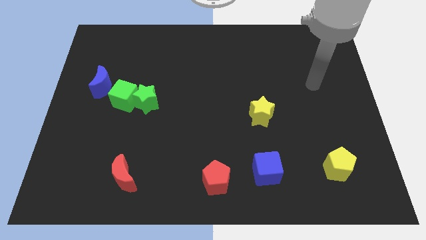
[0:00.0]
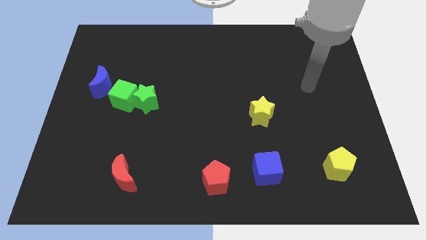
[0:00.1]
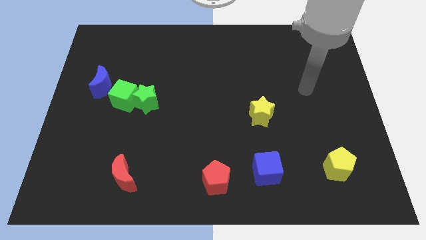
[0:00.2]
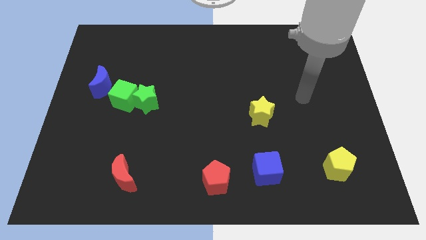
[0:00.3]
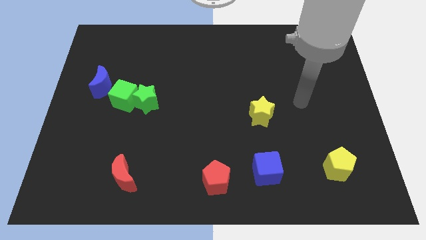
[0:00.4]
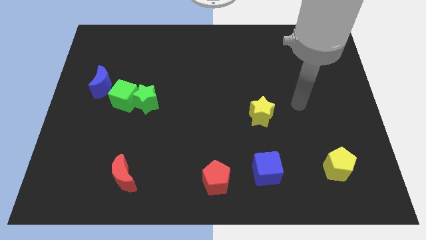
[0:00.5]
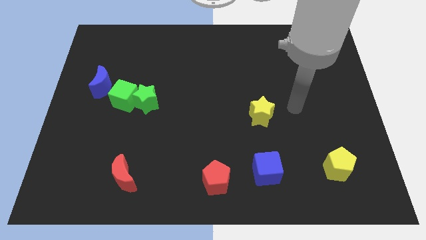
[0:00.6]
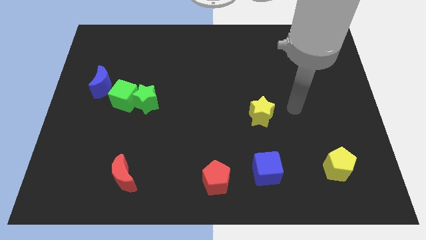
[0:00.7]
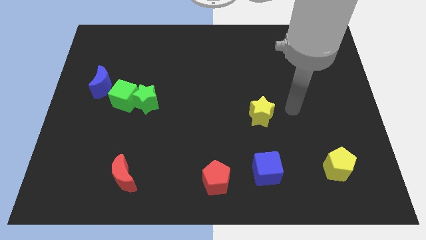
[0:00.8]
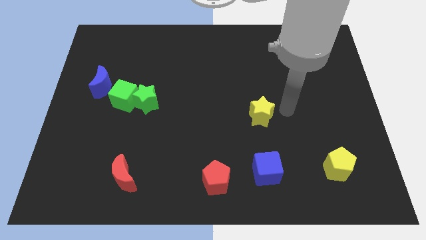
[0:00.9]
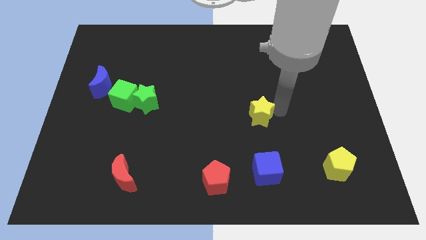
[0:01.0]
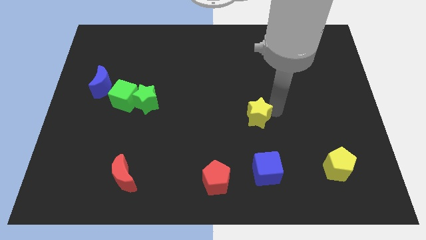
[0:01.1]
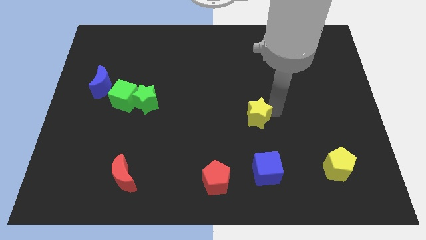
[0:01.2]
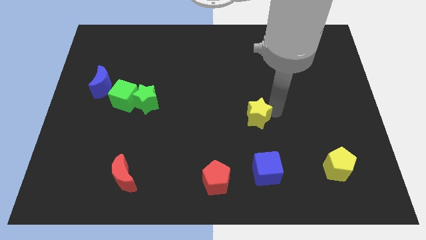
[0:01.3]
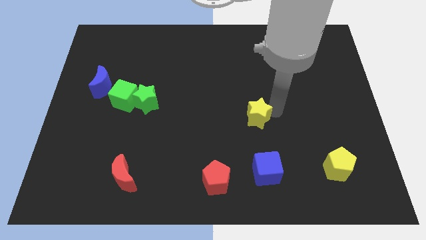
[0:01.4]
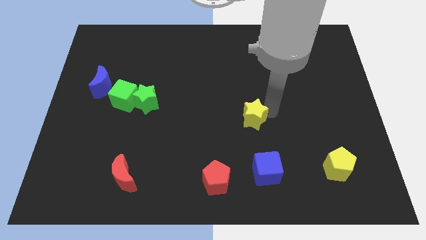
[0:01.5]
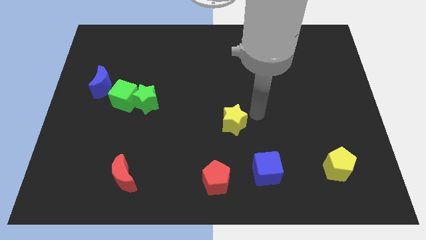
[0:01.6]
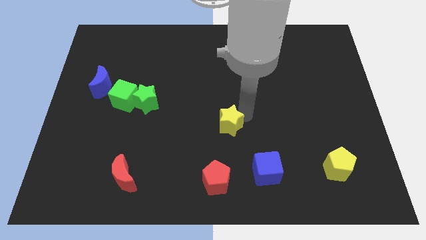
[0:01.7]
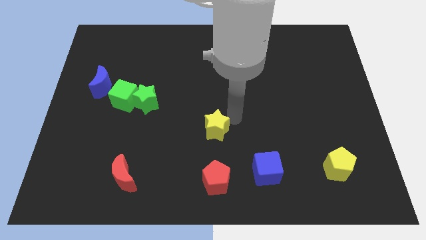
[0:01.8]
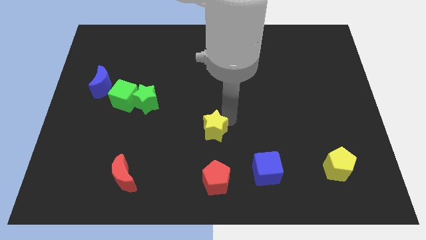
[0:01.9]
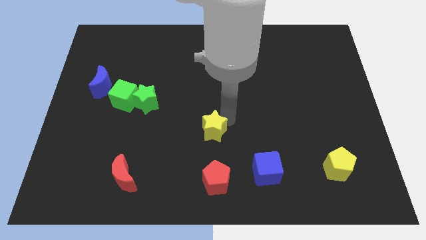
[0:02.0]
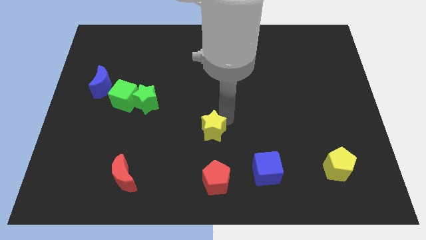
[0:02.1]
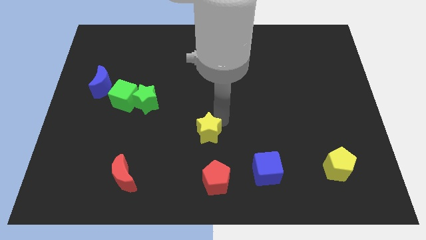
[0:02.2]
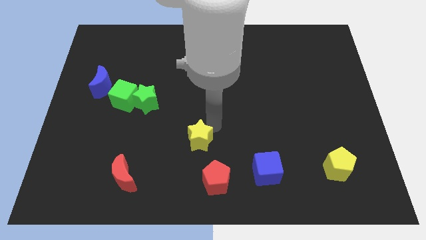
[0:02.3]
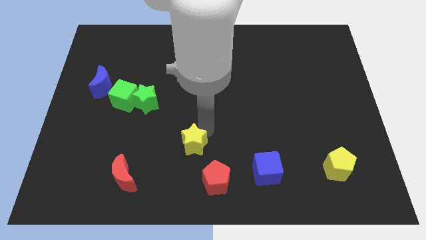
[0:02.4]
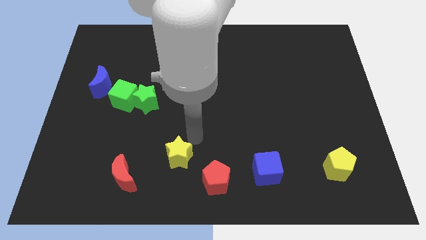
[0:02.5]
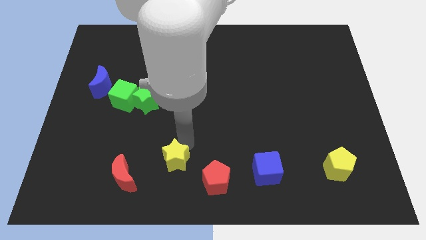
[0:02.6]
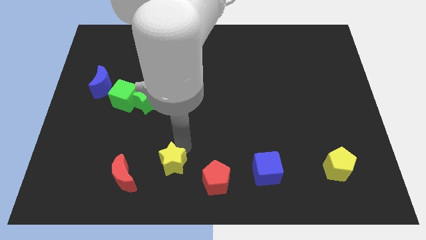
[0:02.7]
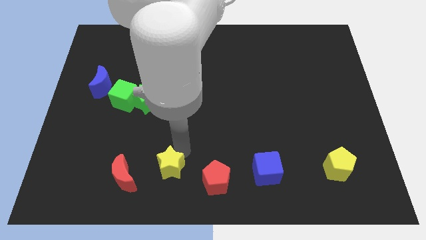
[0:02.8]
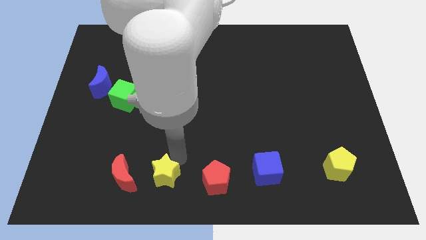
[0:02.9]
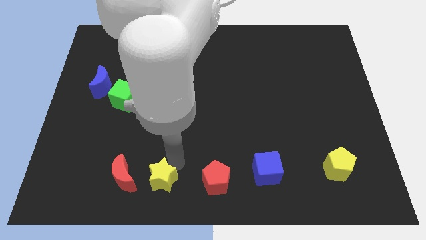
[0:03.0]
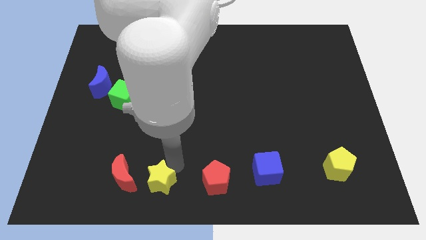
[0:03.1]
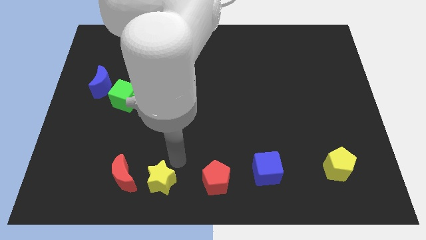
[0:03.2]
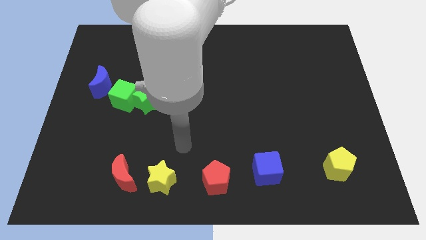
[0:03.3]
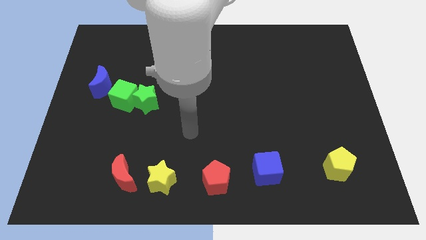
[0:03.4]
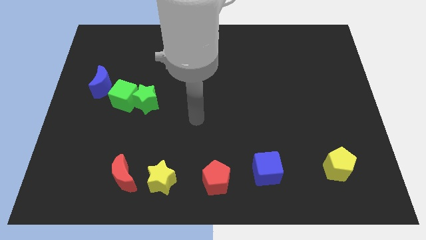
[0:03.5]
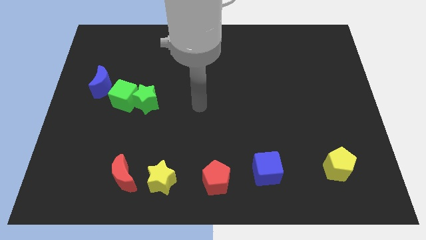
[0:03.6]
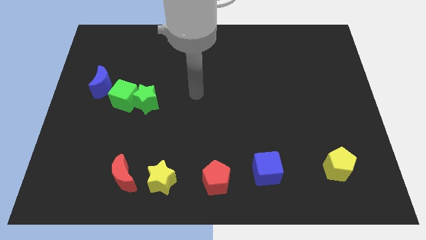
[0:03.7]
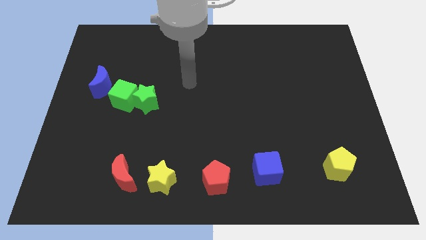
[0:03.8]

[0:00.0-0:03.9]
place the yellow star below the green star

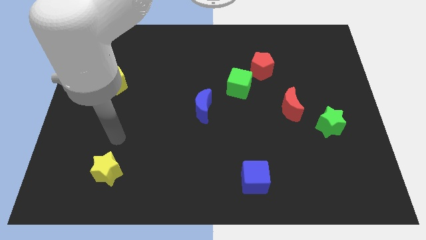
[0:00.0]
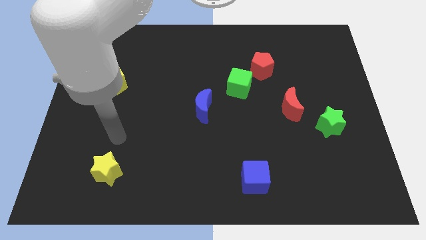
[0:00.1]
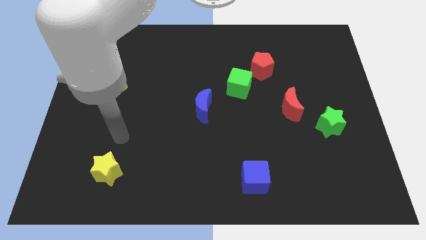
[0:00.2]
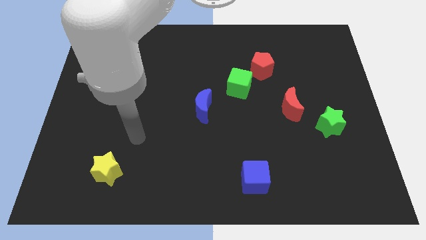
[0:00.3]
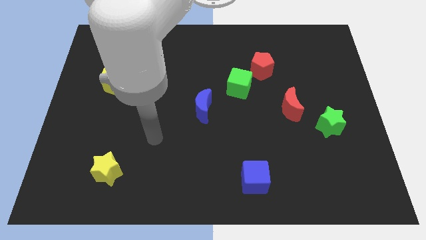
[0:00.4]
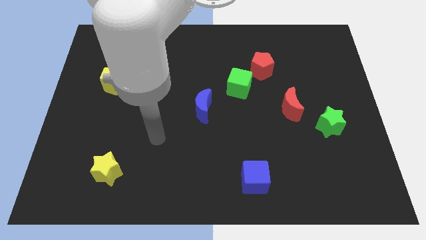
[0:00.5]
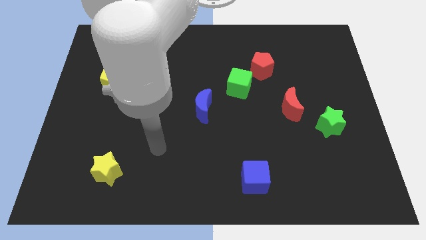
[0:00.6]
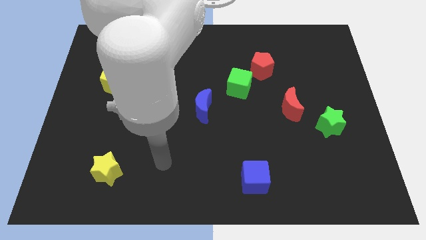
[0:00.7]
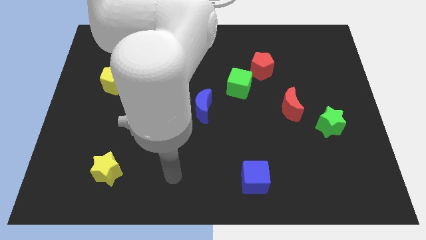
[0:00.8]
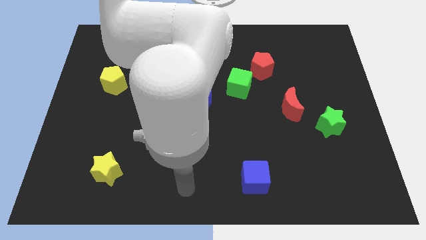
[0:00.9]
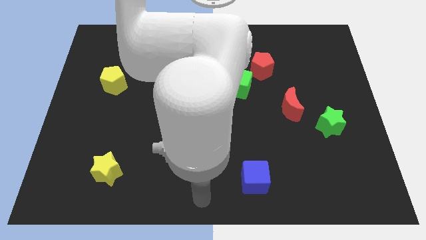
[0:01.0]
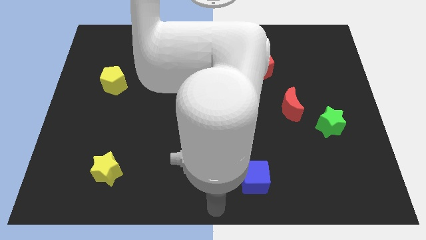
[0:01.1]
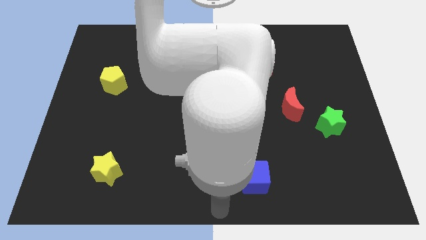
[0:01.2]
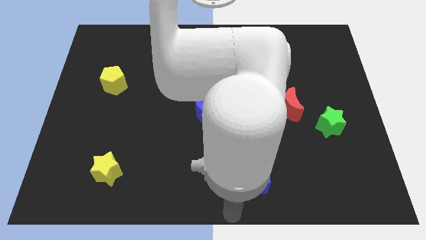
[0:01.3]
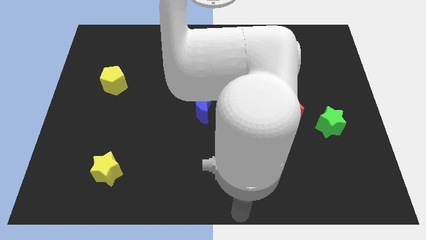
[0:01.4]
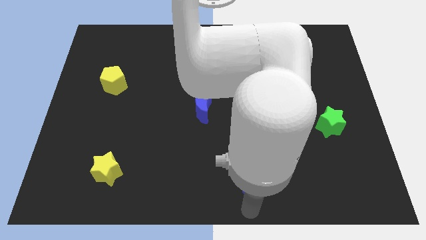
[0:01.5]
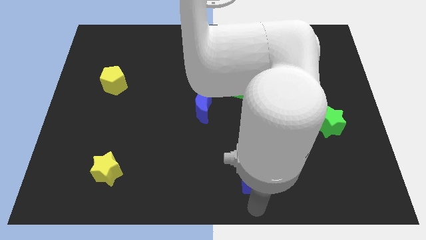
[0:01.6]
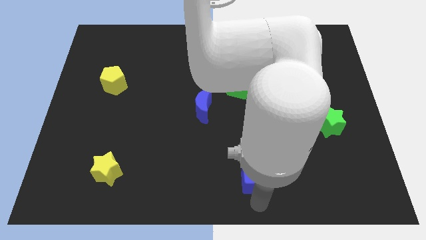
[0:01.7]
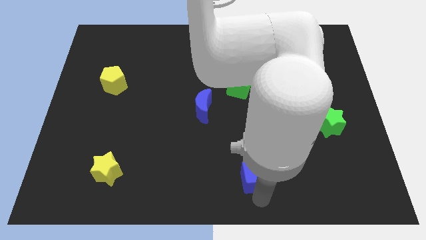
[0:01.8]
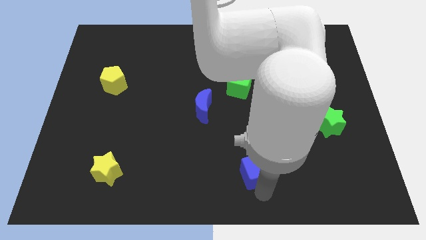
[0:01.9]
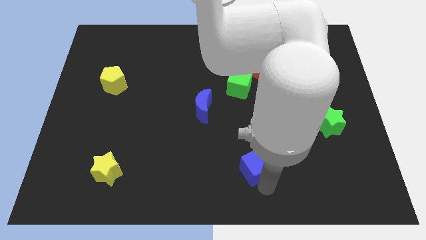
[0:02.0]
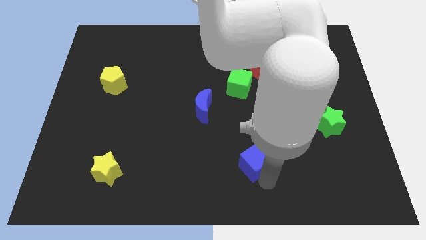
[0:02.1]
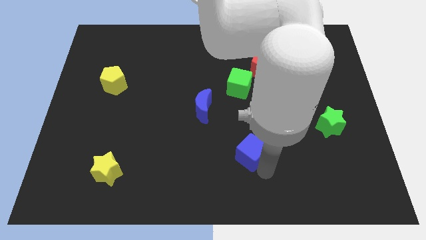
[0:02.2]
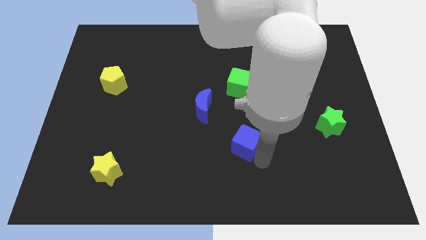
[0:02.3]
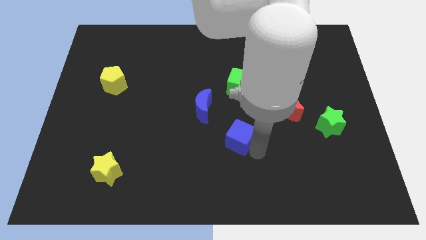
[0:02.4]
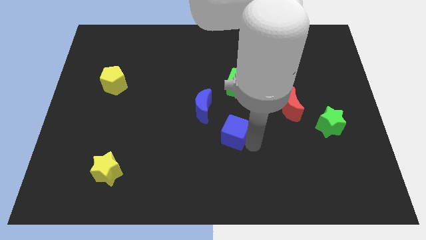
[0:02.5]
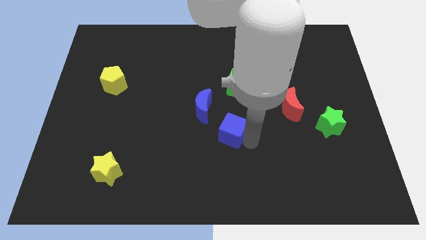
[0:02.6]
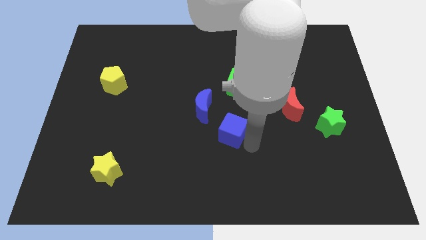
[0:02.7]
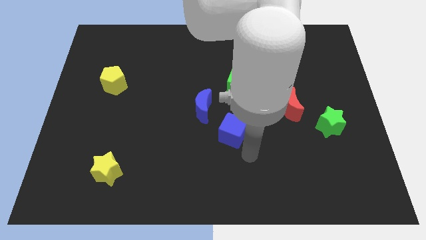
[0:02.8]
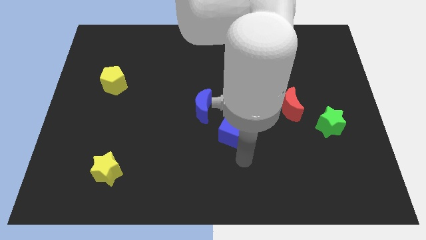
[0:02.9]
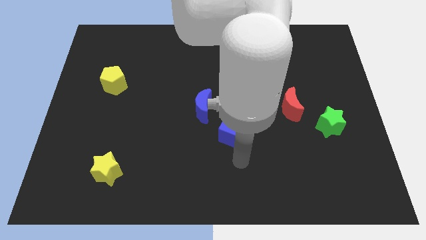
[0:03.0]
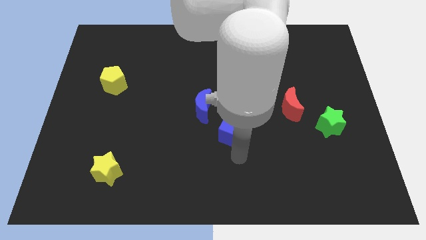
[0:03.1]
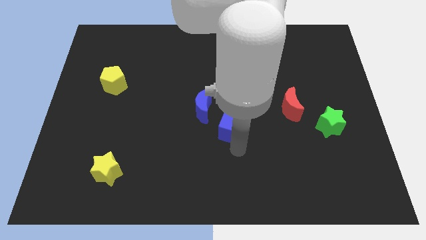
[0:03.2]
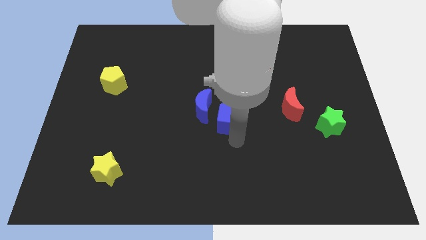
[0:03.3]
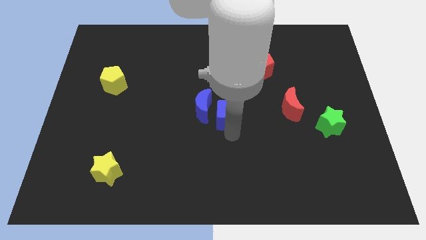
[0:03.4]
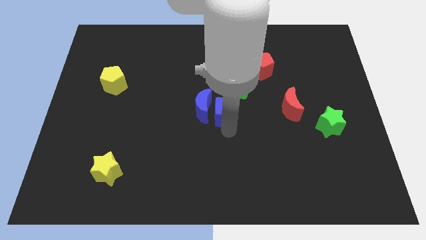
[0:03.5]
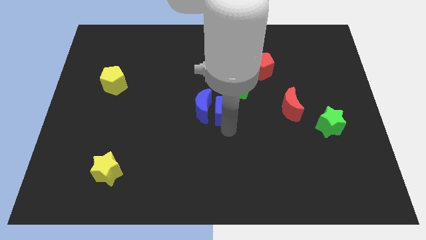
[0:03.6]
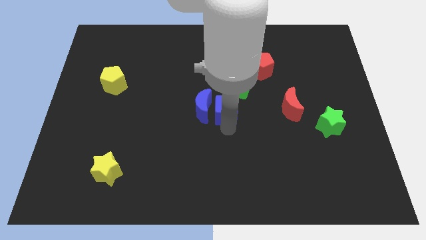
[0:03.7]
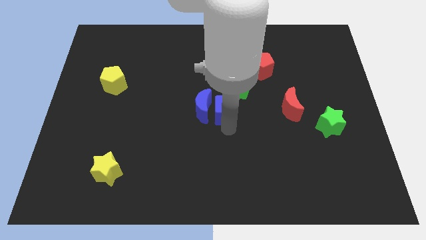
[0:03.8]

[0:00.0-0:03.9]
place the blue cube in between the red moon and blue moon

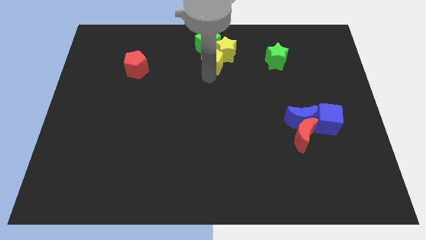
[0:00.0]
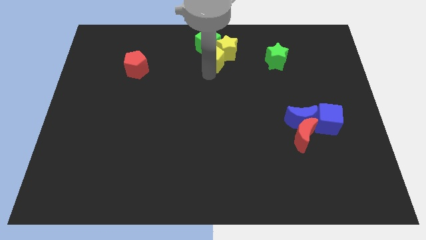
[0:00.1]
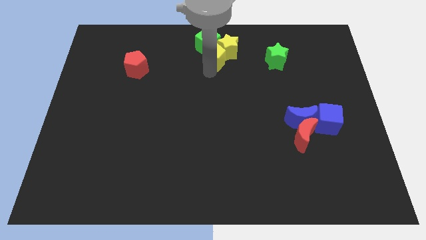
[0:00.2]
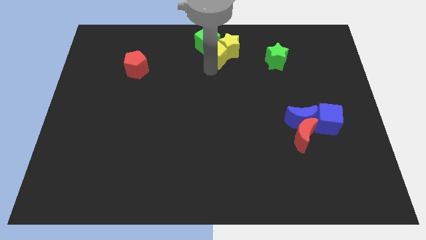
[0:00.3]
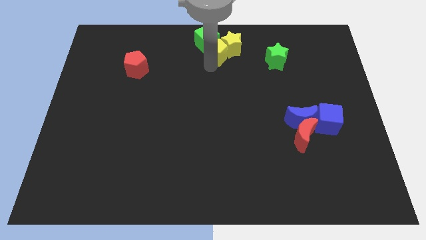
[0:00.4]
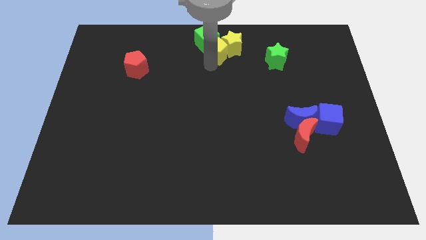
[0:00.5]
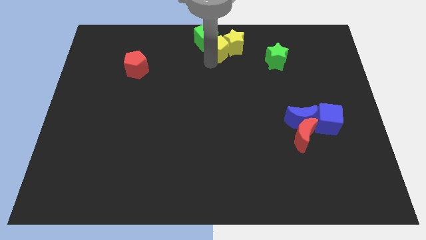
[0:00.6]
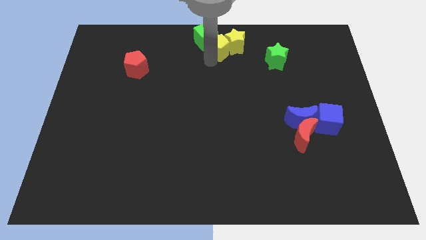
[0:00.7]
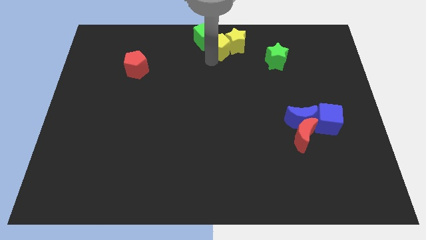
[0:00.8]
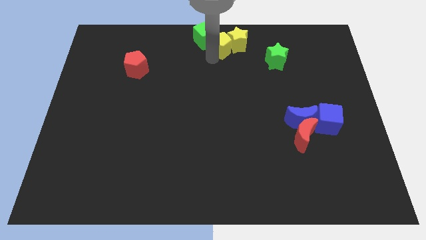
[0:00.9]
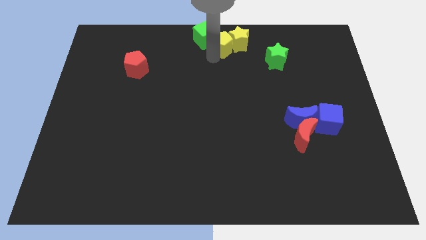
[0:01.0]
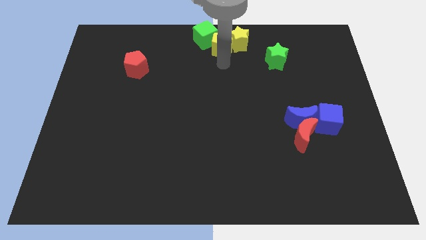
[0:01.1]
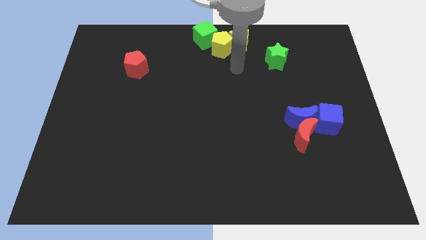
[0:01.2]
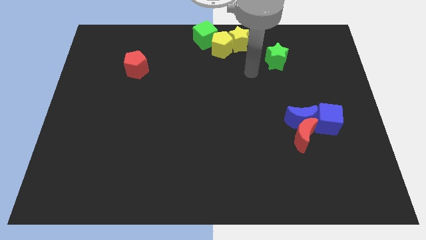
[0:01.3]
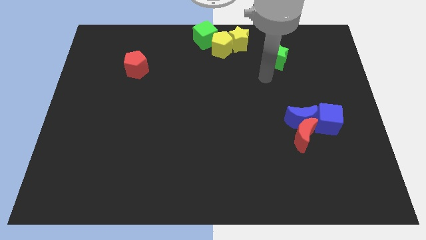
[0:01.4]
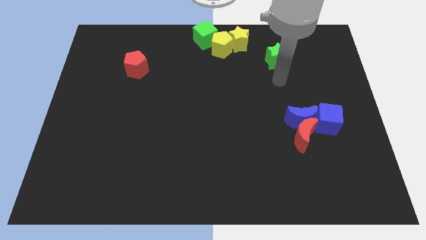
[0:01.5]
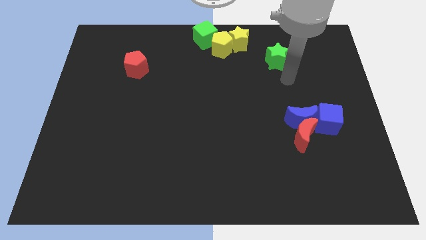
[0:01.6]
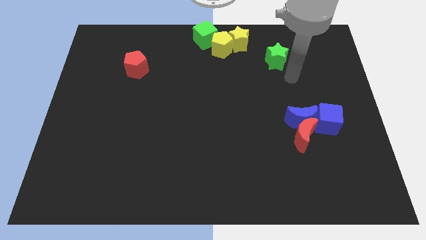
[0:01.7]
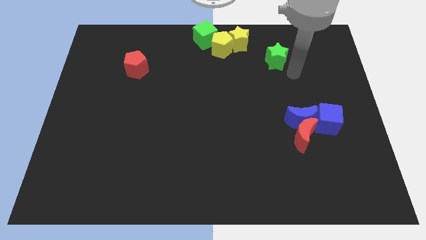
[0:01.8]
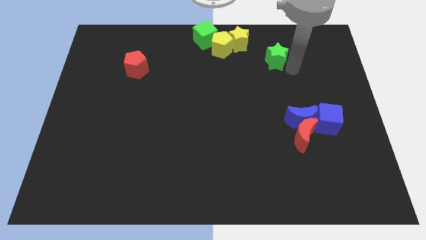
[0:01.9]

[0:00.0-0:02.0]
place your arm at the right side of the green star
